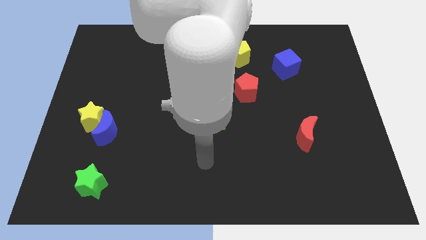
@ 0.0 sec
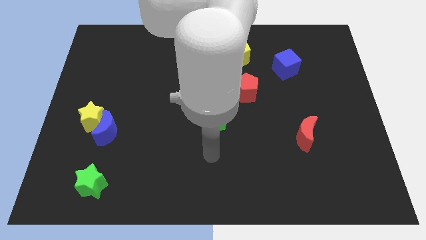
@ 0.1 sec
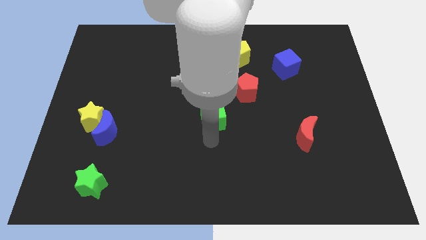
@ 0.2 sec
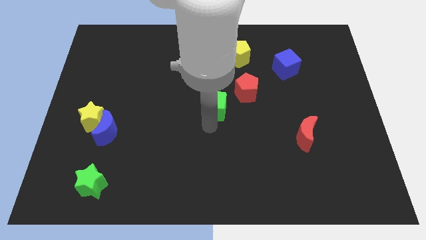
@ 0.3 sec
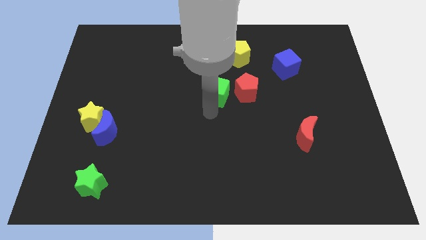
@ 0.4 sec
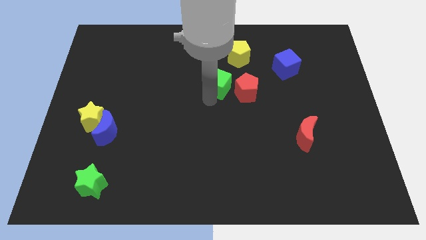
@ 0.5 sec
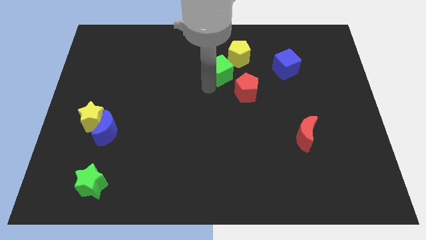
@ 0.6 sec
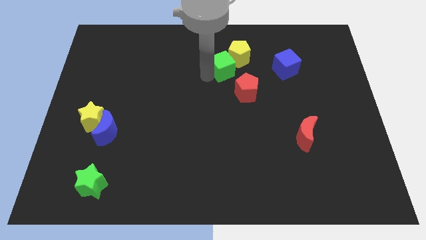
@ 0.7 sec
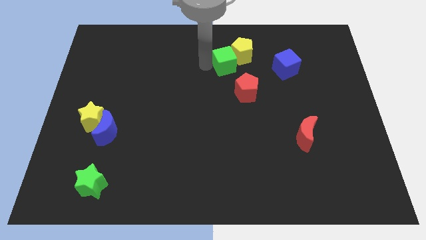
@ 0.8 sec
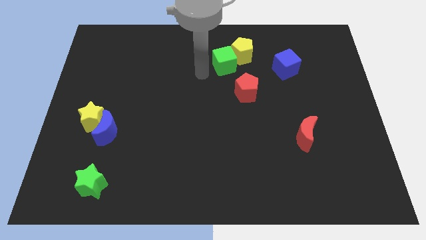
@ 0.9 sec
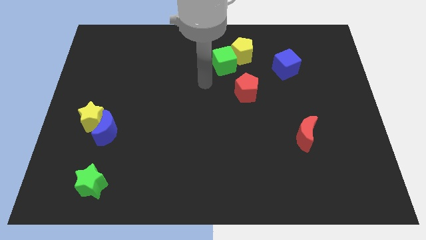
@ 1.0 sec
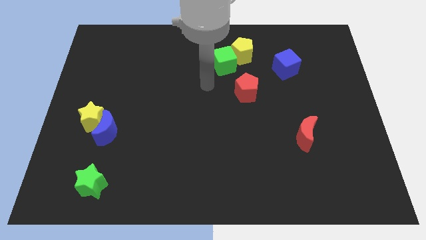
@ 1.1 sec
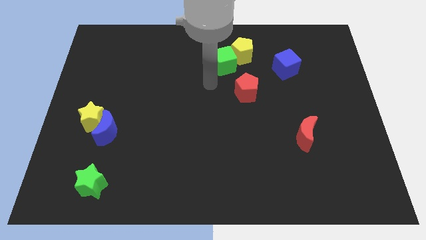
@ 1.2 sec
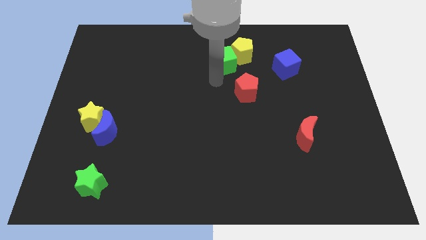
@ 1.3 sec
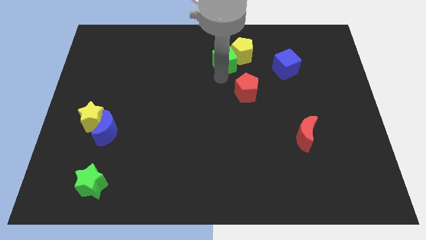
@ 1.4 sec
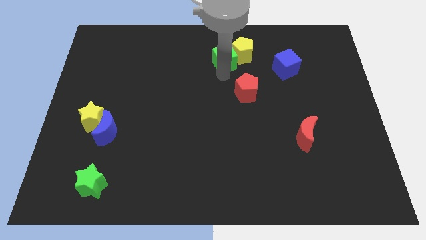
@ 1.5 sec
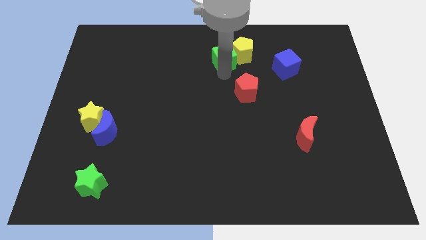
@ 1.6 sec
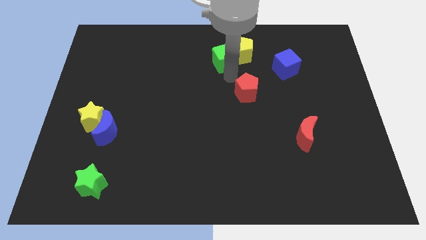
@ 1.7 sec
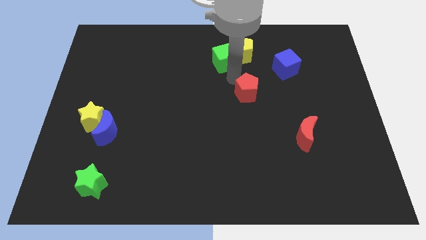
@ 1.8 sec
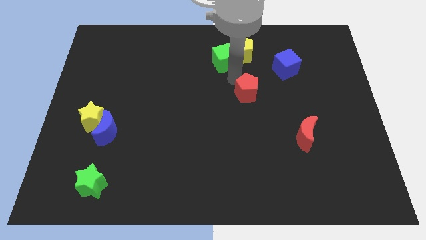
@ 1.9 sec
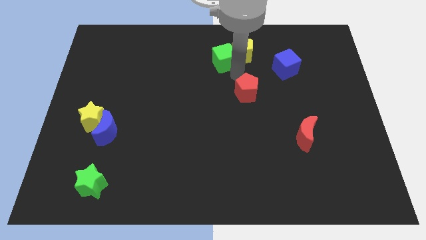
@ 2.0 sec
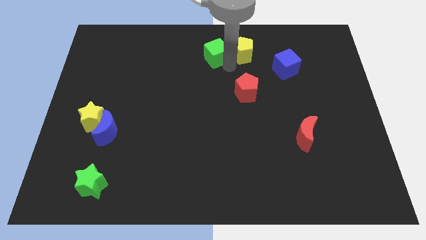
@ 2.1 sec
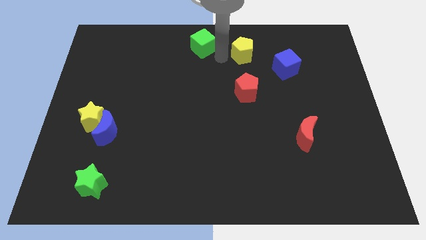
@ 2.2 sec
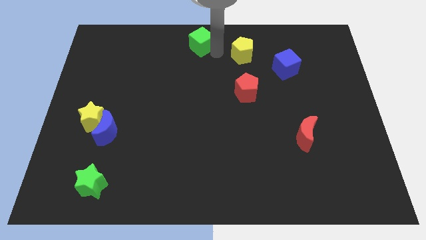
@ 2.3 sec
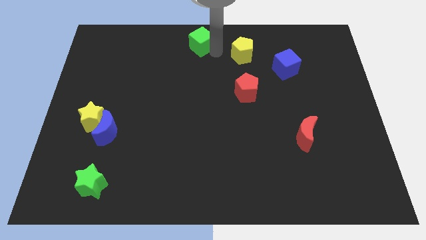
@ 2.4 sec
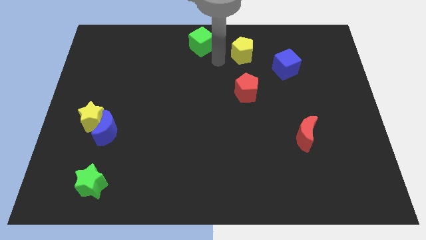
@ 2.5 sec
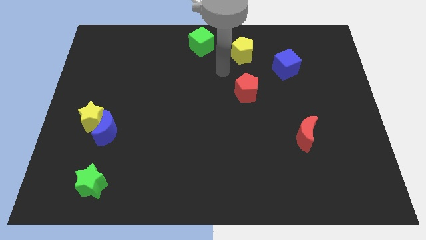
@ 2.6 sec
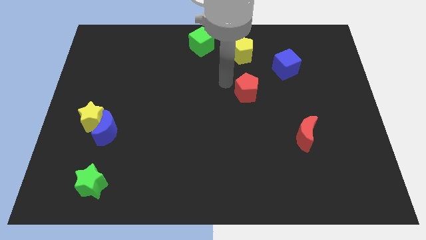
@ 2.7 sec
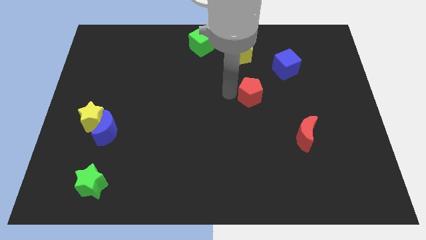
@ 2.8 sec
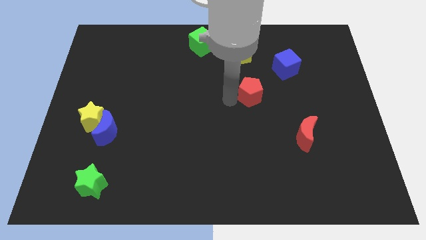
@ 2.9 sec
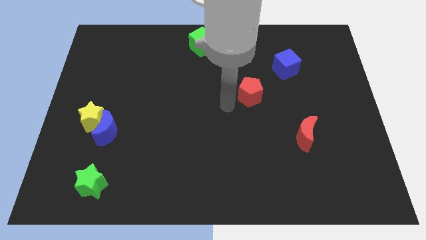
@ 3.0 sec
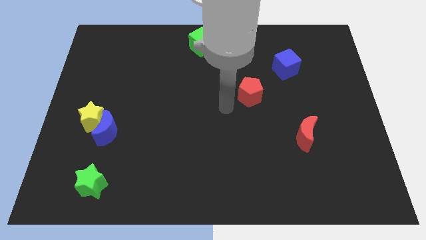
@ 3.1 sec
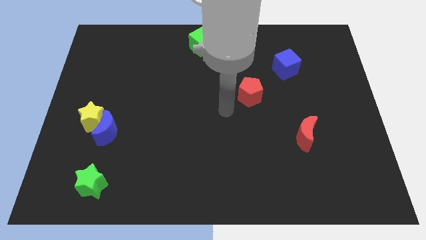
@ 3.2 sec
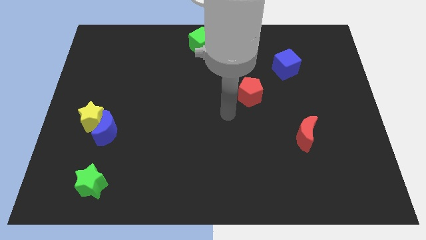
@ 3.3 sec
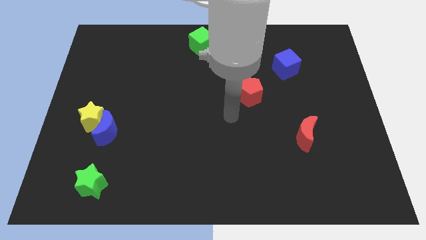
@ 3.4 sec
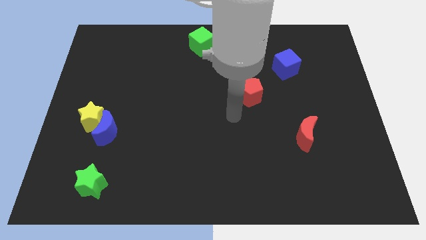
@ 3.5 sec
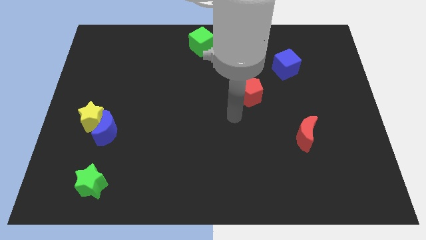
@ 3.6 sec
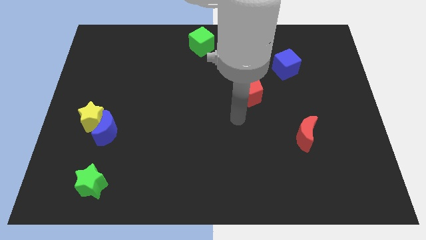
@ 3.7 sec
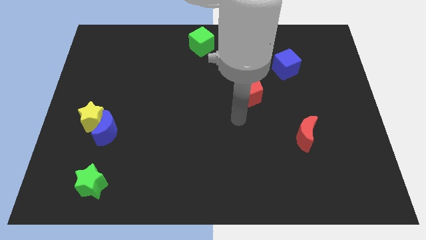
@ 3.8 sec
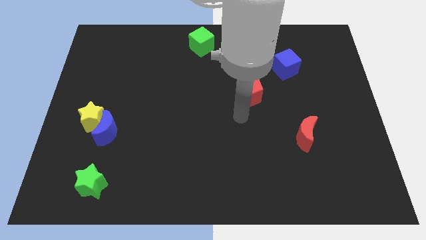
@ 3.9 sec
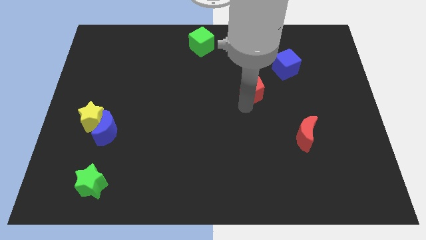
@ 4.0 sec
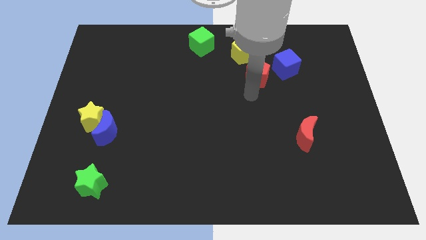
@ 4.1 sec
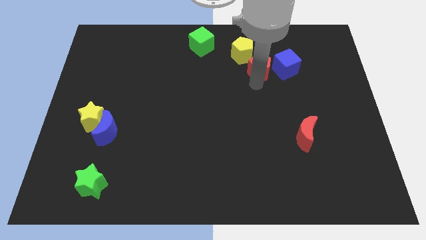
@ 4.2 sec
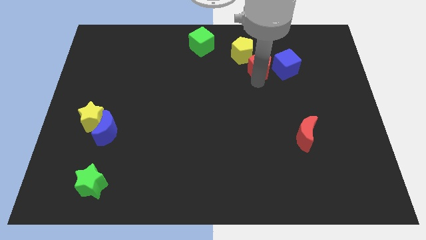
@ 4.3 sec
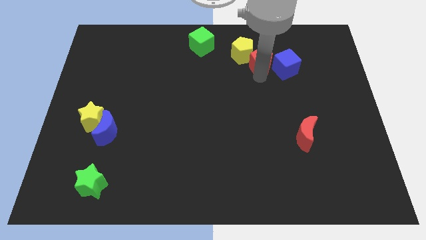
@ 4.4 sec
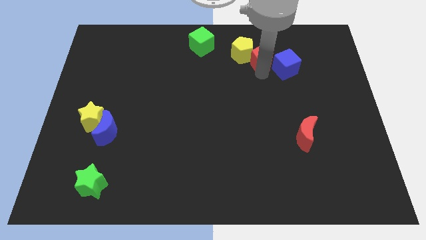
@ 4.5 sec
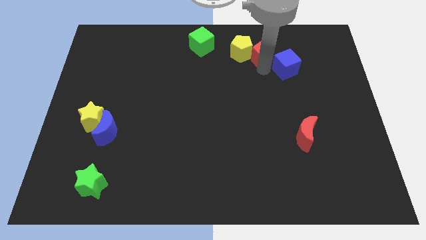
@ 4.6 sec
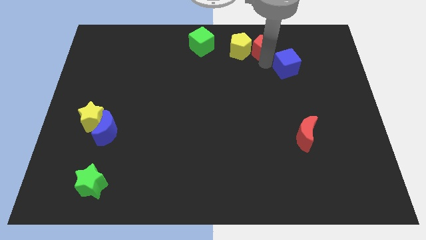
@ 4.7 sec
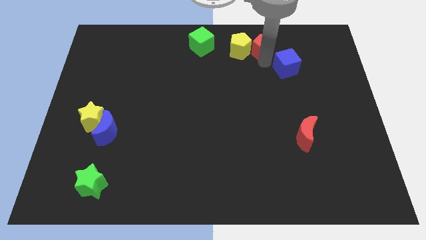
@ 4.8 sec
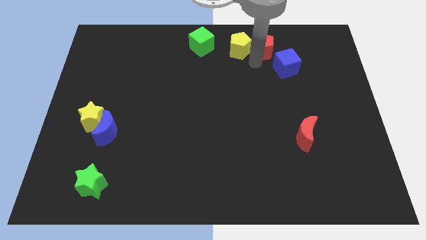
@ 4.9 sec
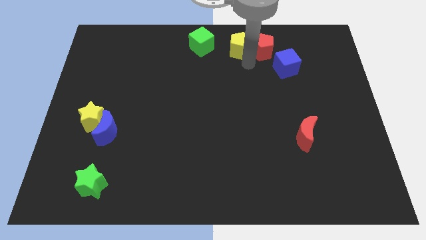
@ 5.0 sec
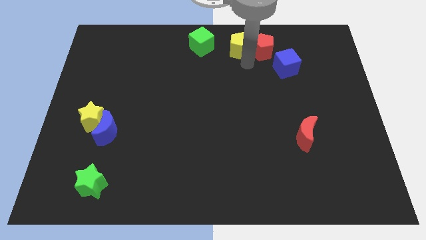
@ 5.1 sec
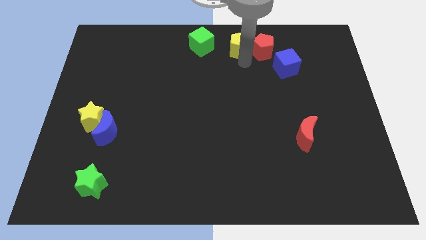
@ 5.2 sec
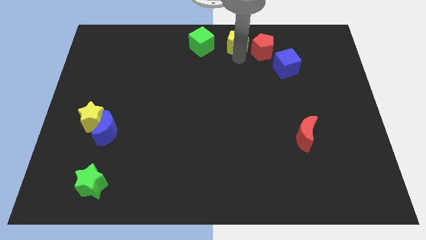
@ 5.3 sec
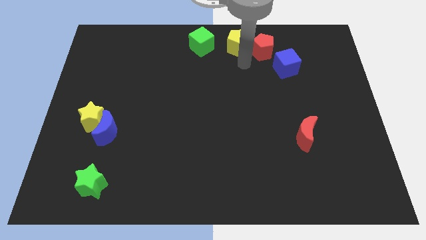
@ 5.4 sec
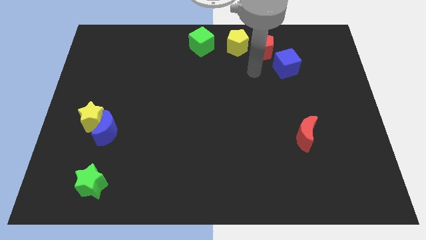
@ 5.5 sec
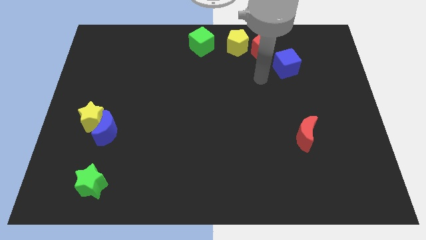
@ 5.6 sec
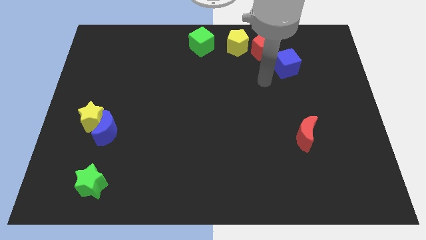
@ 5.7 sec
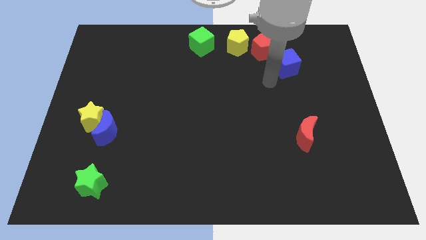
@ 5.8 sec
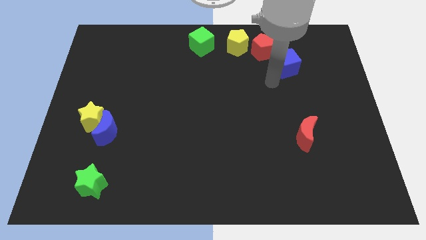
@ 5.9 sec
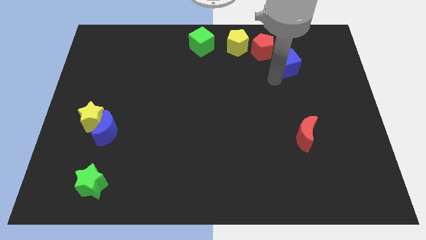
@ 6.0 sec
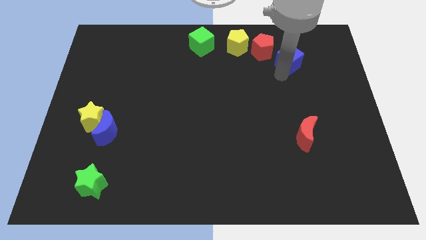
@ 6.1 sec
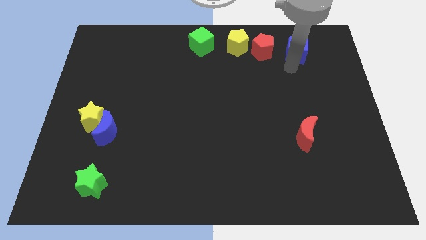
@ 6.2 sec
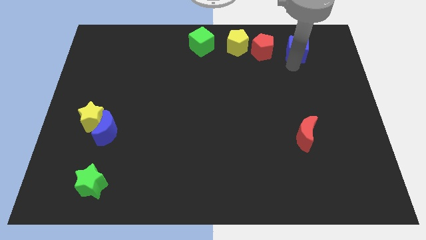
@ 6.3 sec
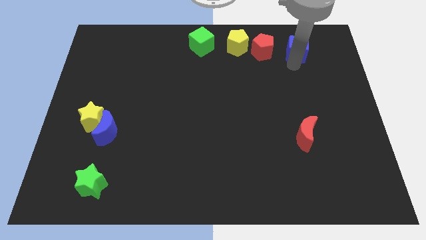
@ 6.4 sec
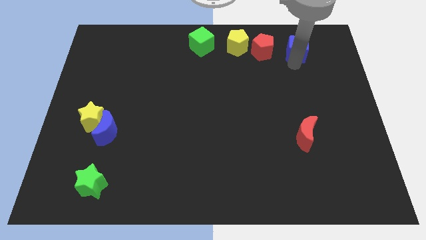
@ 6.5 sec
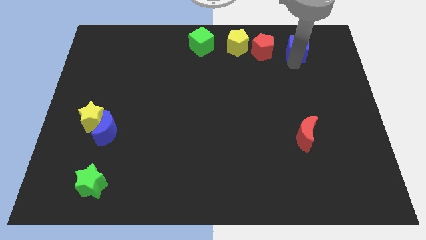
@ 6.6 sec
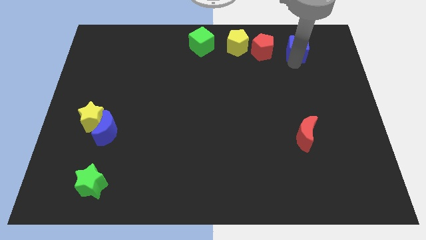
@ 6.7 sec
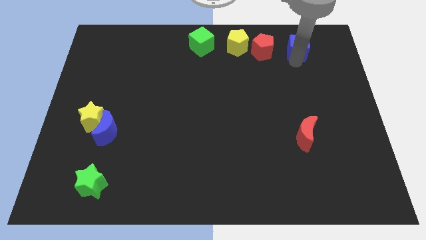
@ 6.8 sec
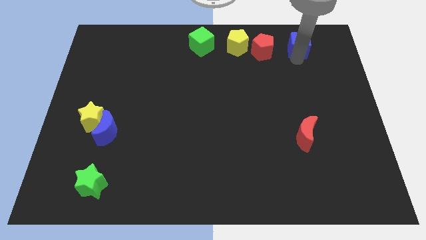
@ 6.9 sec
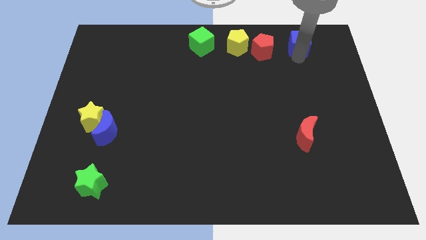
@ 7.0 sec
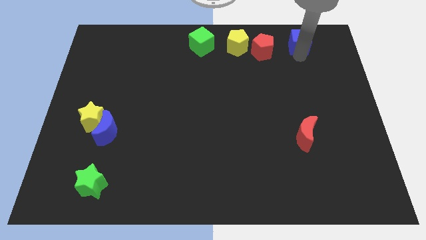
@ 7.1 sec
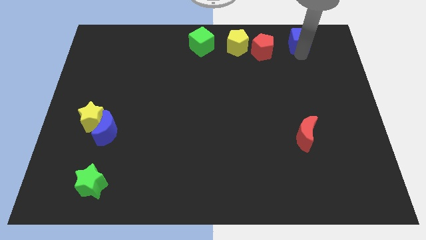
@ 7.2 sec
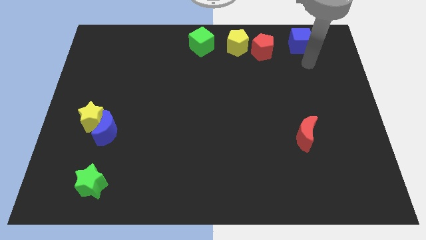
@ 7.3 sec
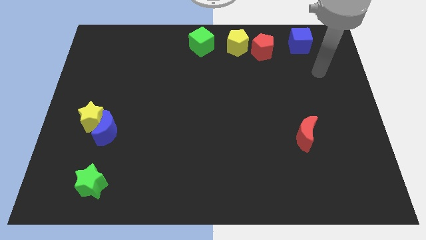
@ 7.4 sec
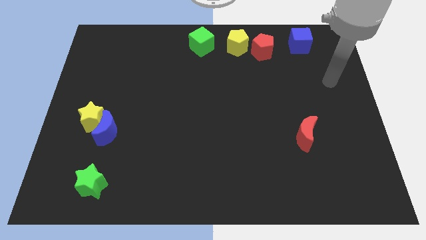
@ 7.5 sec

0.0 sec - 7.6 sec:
form a horizontal line using the group of blocks at the top side of the board

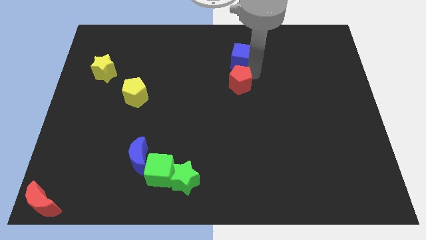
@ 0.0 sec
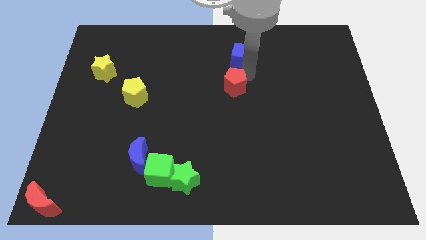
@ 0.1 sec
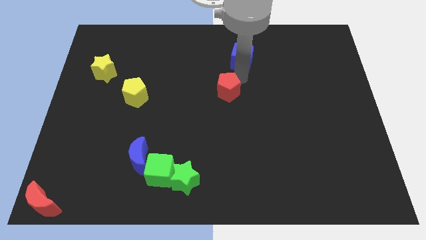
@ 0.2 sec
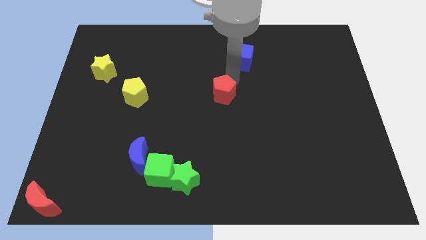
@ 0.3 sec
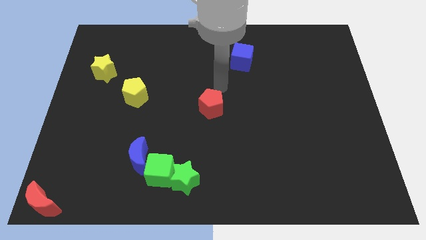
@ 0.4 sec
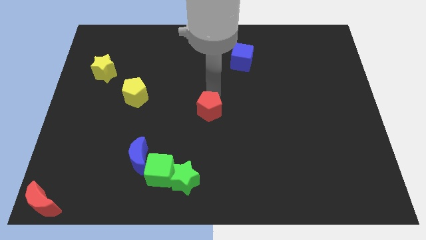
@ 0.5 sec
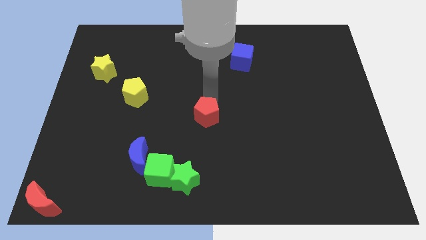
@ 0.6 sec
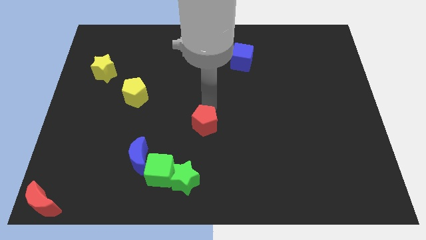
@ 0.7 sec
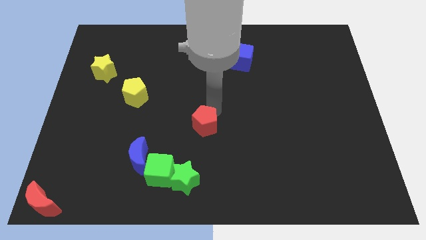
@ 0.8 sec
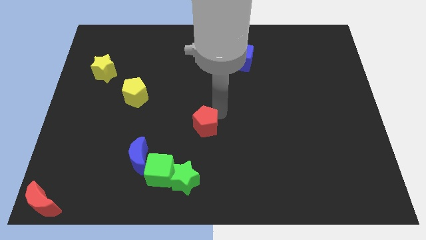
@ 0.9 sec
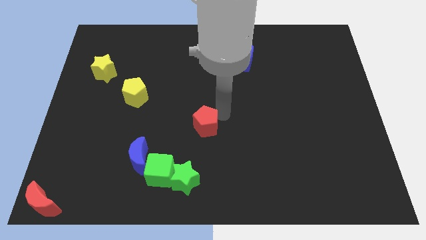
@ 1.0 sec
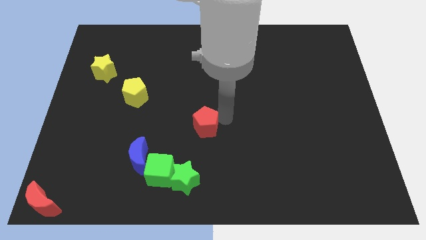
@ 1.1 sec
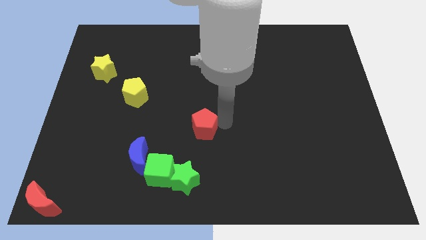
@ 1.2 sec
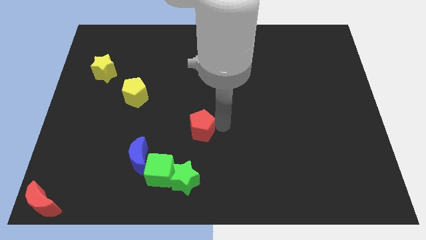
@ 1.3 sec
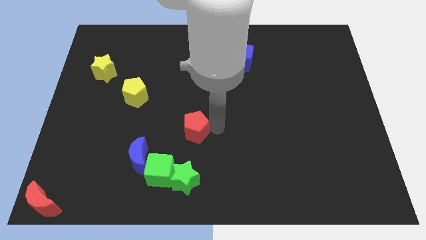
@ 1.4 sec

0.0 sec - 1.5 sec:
push red pentagon vertically to the top of the green star
